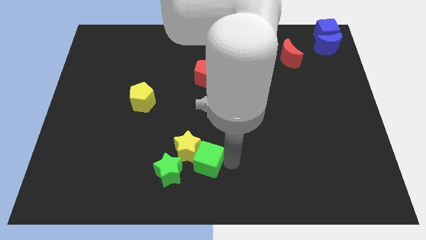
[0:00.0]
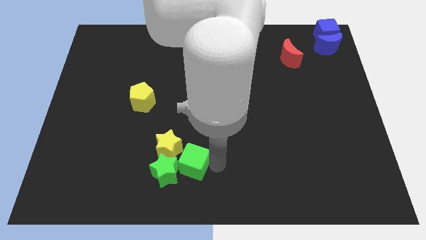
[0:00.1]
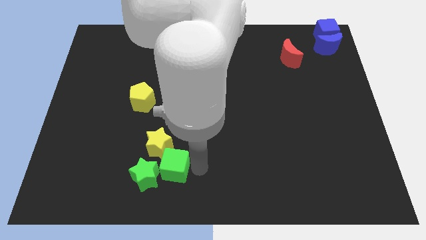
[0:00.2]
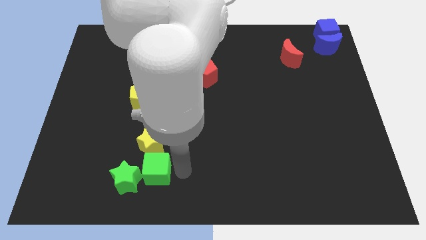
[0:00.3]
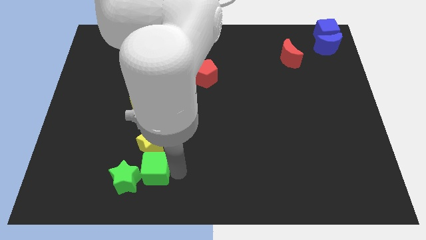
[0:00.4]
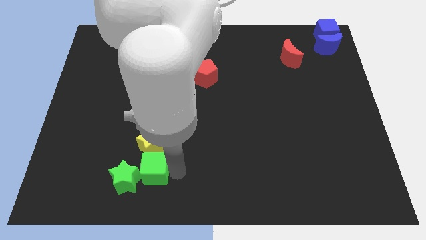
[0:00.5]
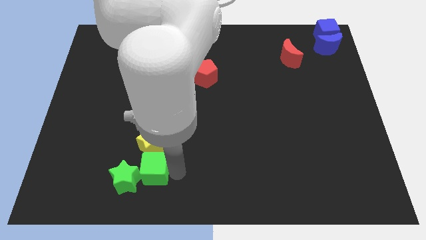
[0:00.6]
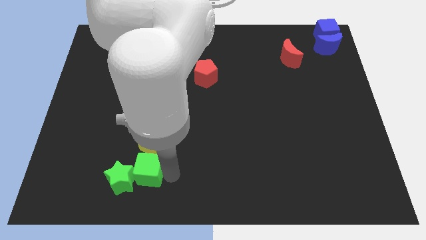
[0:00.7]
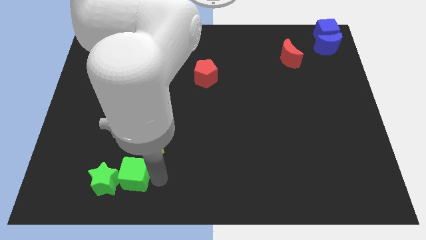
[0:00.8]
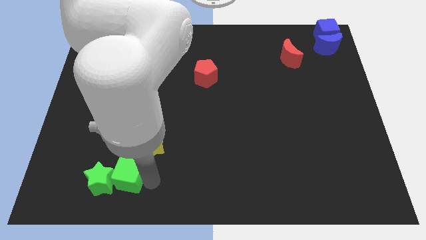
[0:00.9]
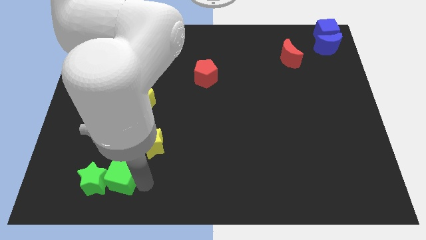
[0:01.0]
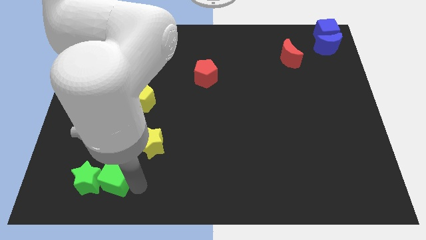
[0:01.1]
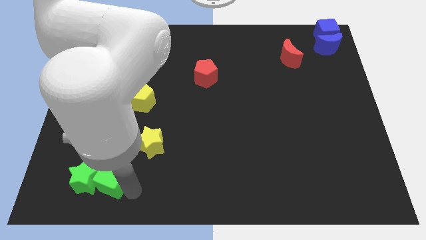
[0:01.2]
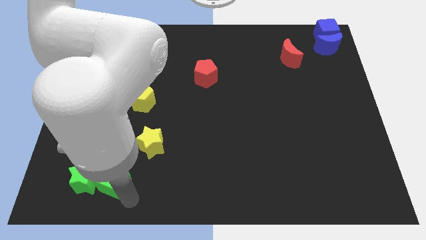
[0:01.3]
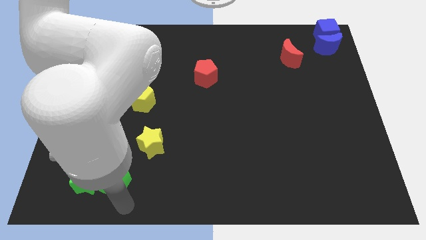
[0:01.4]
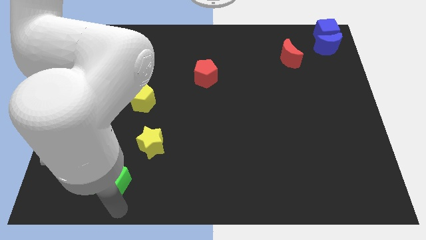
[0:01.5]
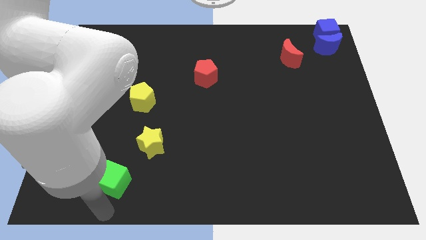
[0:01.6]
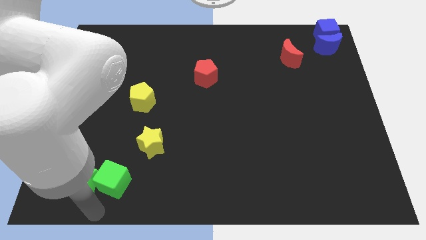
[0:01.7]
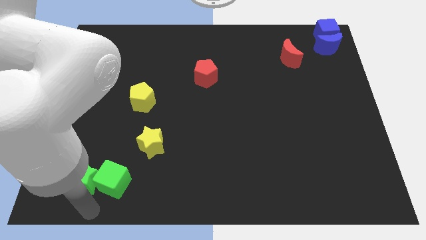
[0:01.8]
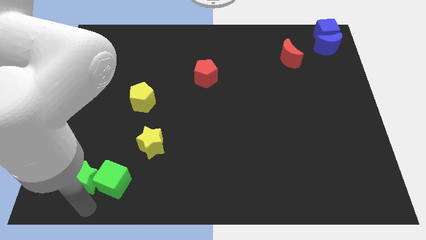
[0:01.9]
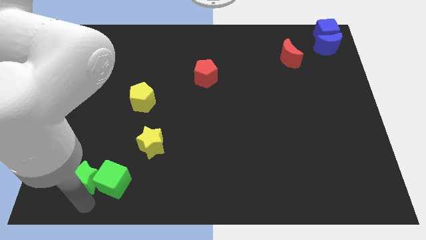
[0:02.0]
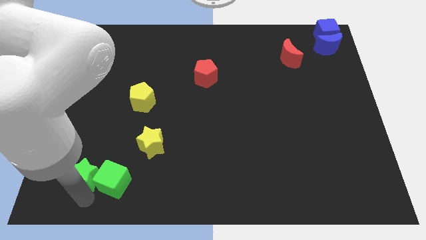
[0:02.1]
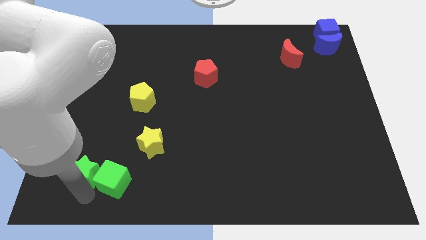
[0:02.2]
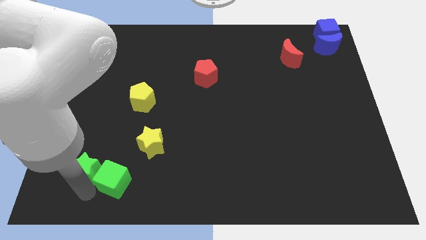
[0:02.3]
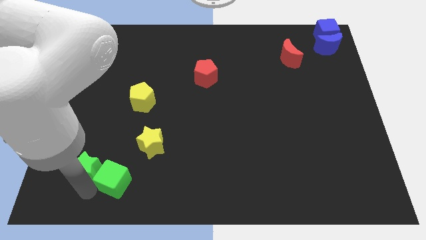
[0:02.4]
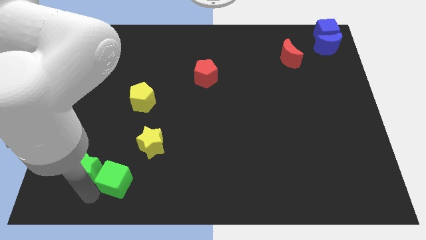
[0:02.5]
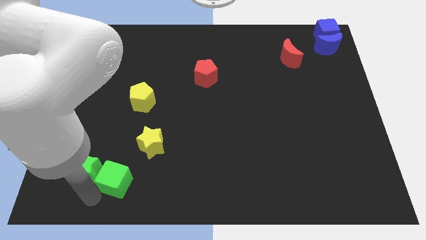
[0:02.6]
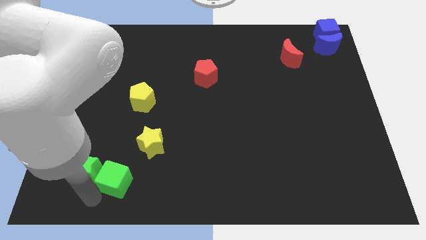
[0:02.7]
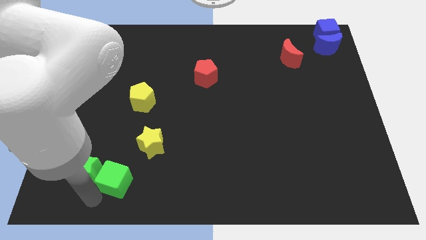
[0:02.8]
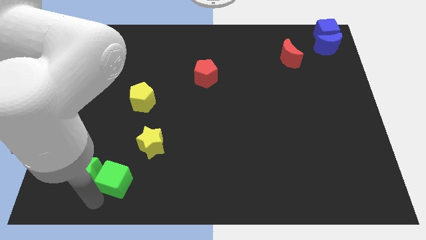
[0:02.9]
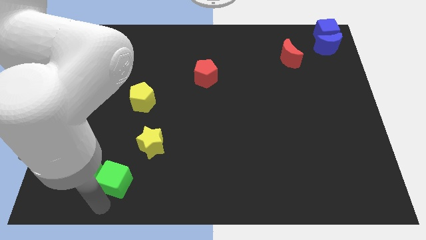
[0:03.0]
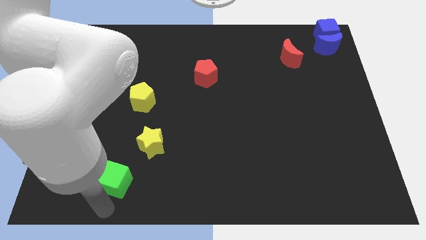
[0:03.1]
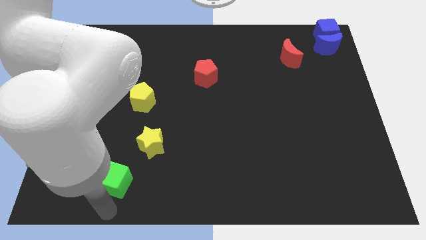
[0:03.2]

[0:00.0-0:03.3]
move the green cube into the green star

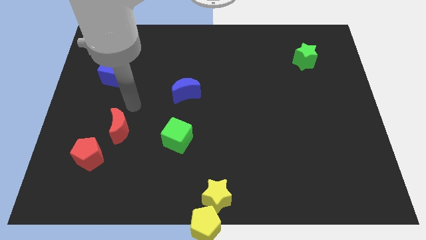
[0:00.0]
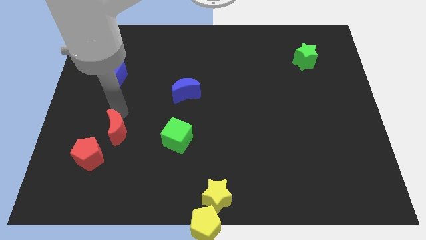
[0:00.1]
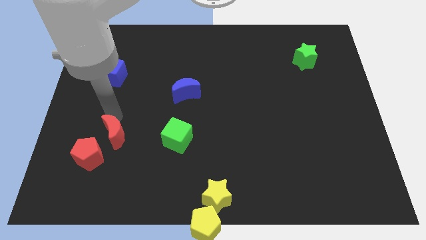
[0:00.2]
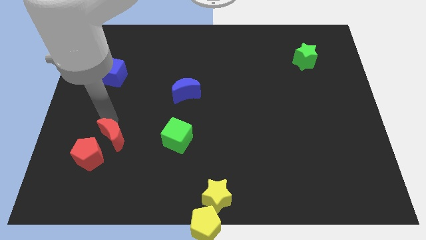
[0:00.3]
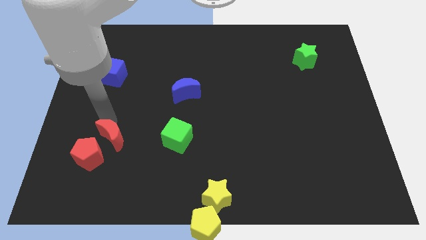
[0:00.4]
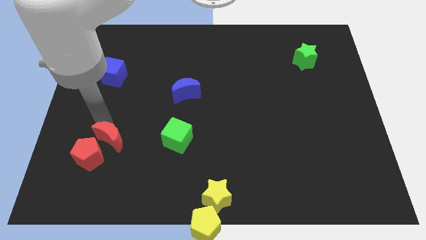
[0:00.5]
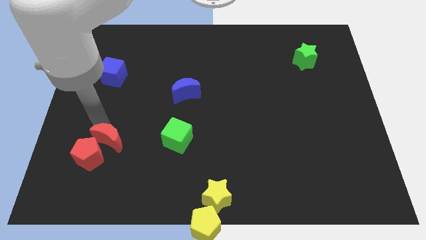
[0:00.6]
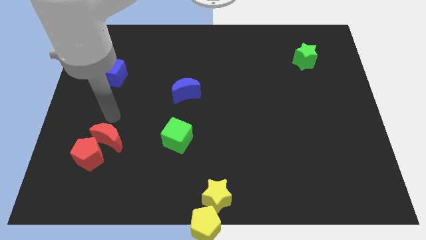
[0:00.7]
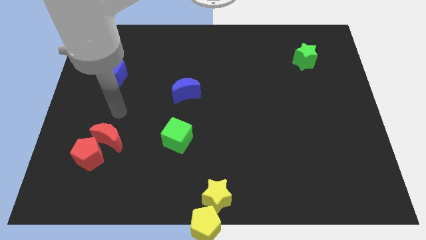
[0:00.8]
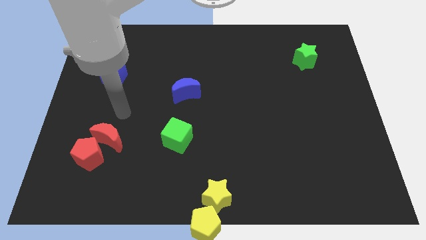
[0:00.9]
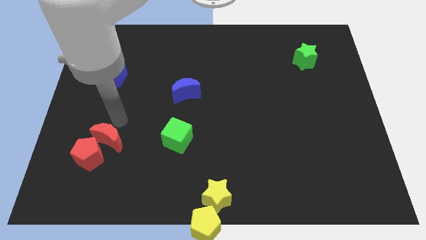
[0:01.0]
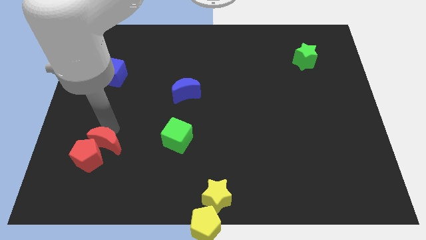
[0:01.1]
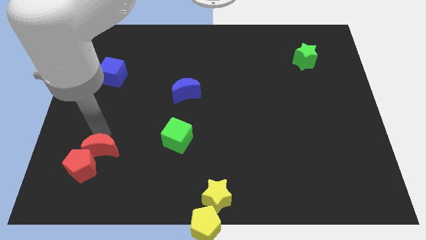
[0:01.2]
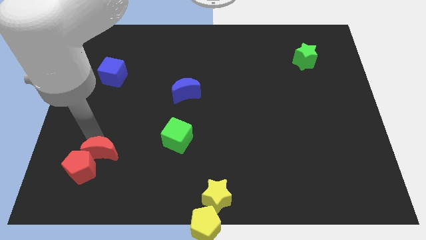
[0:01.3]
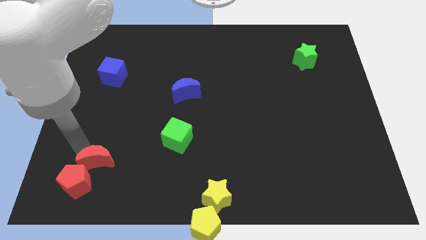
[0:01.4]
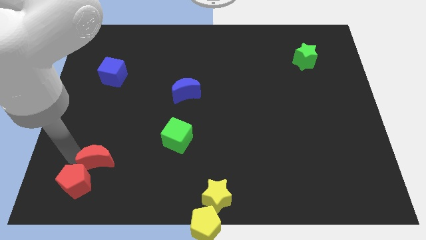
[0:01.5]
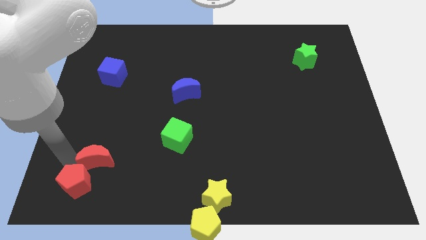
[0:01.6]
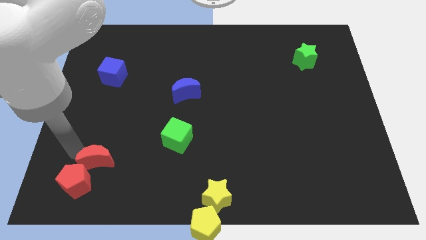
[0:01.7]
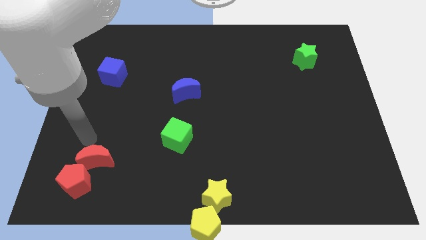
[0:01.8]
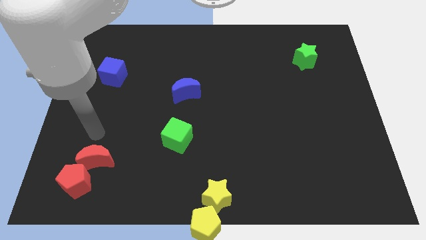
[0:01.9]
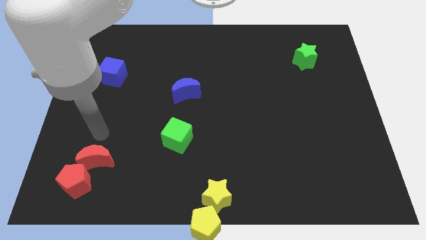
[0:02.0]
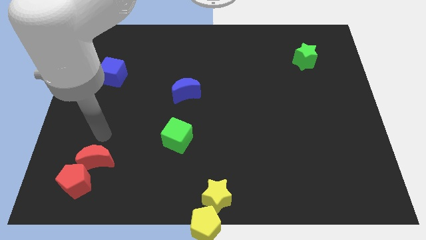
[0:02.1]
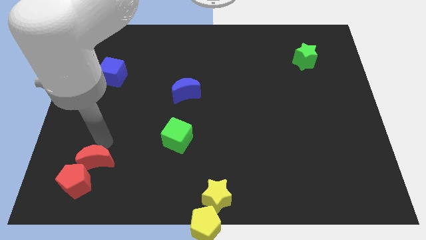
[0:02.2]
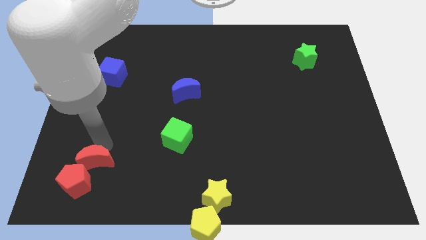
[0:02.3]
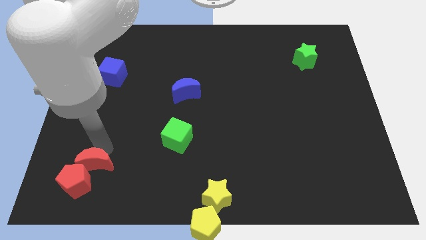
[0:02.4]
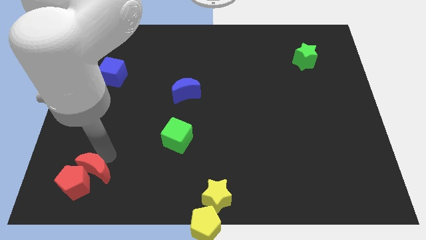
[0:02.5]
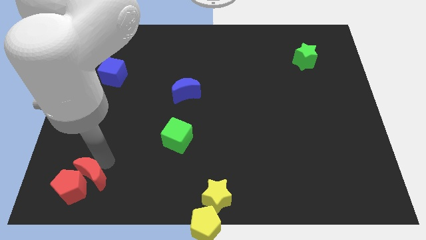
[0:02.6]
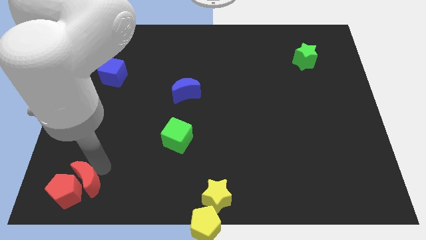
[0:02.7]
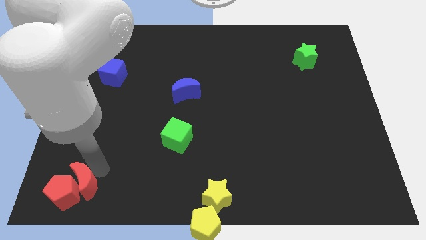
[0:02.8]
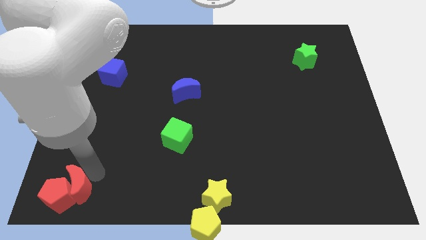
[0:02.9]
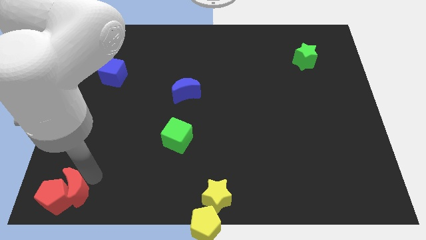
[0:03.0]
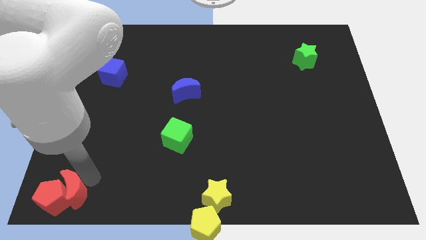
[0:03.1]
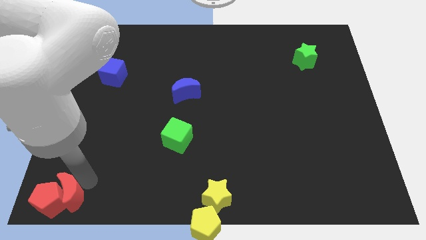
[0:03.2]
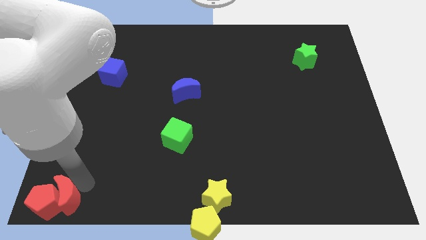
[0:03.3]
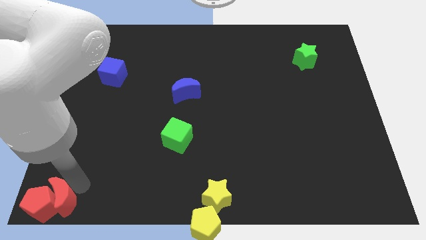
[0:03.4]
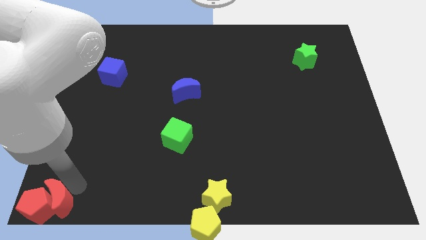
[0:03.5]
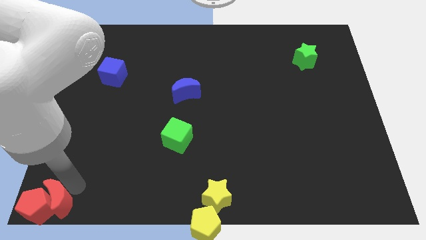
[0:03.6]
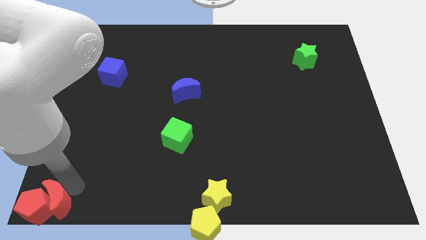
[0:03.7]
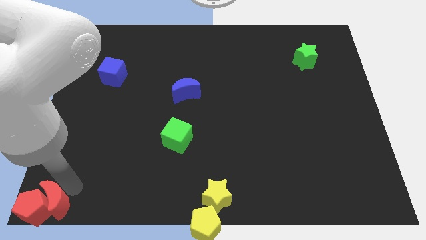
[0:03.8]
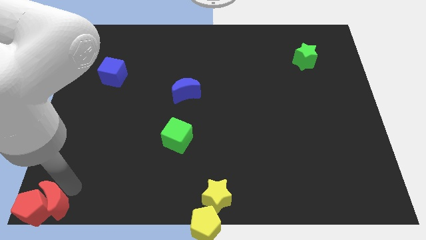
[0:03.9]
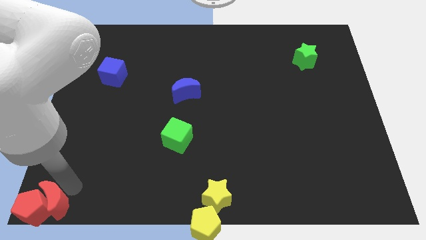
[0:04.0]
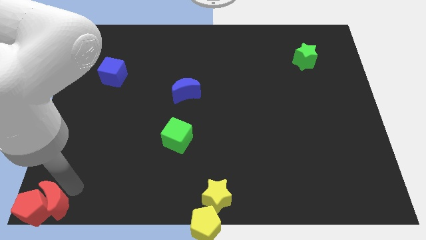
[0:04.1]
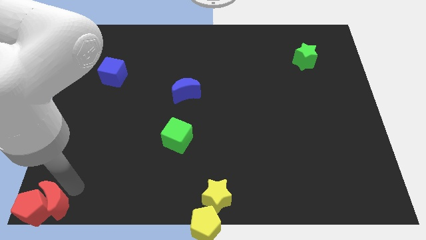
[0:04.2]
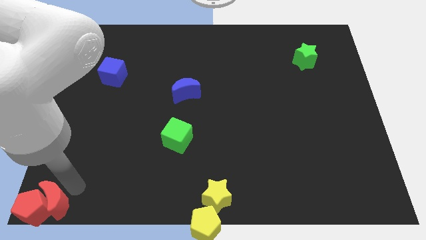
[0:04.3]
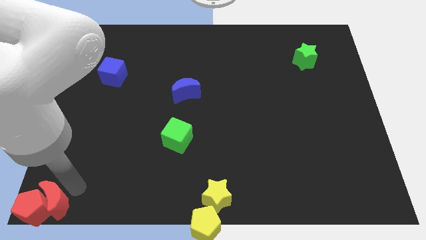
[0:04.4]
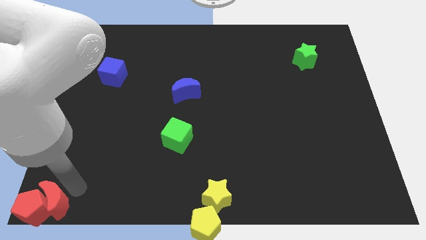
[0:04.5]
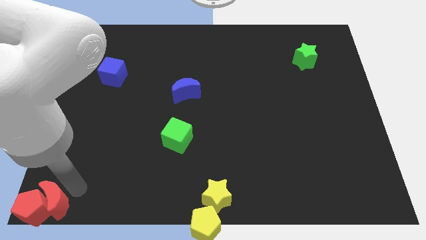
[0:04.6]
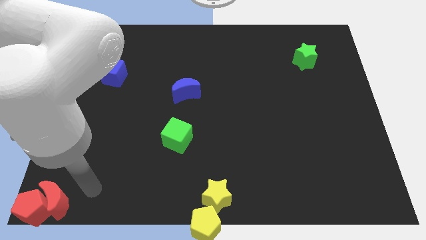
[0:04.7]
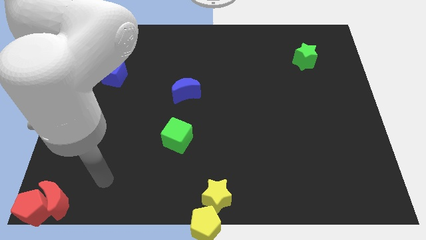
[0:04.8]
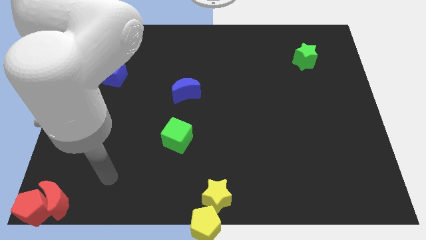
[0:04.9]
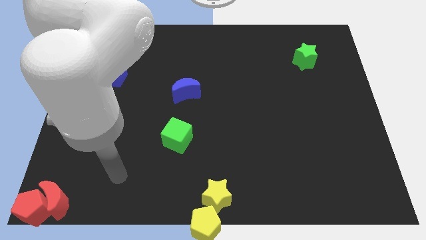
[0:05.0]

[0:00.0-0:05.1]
push red color blocks to the bottom left corner

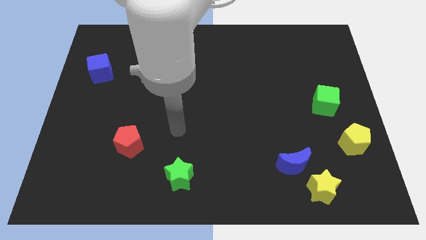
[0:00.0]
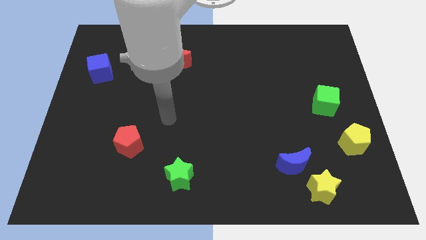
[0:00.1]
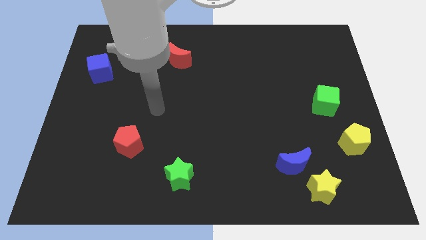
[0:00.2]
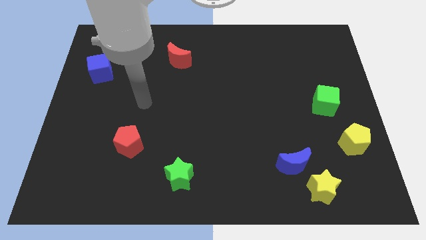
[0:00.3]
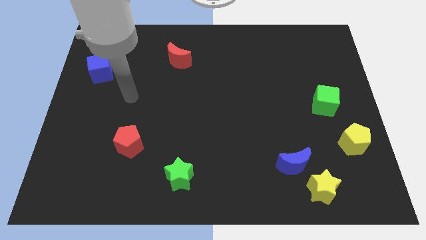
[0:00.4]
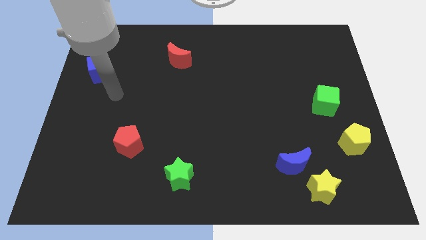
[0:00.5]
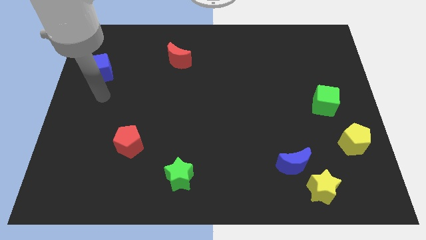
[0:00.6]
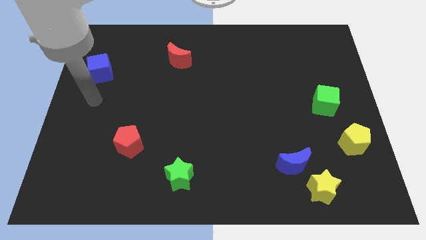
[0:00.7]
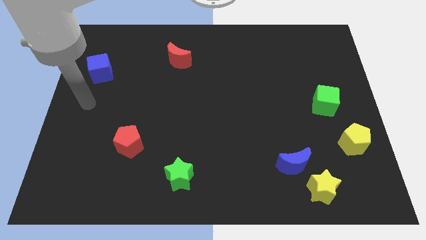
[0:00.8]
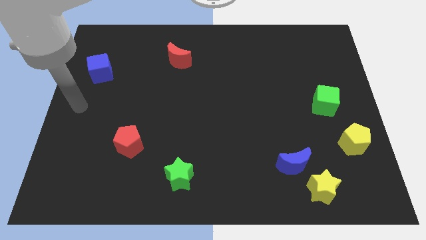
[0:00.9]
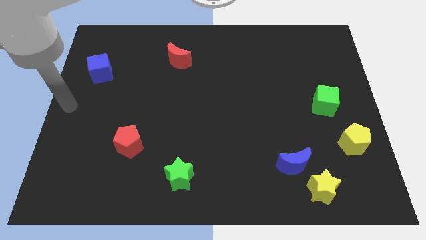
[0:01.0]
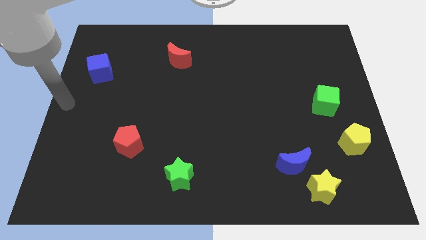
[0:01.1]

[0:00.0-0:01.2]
point your arm at the center left side of the board
